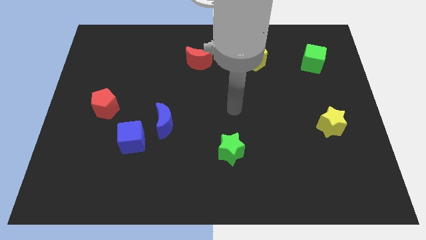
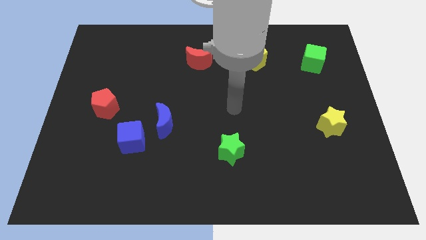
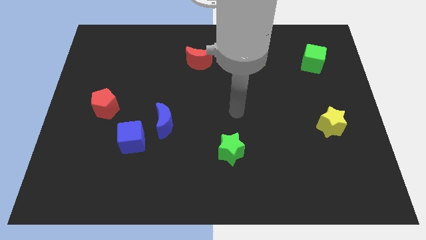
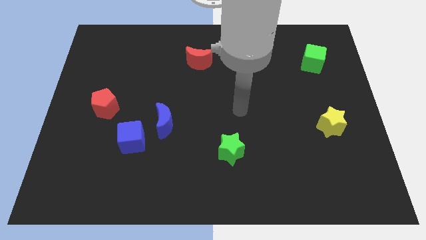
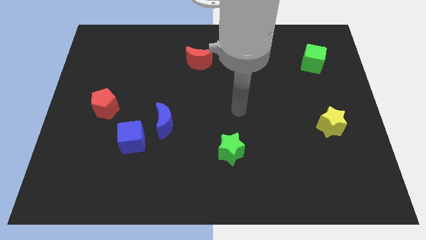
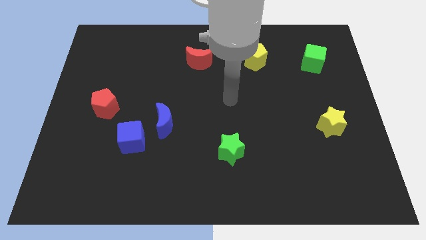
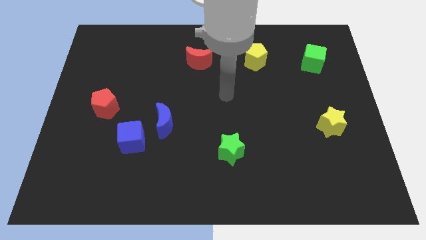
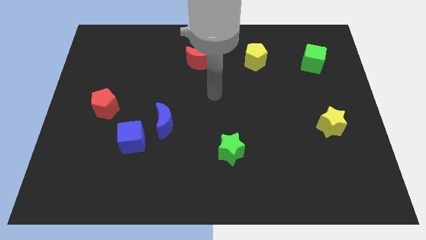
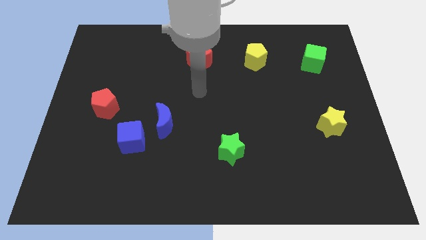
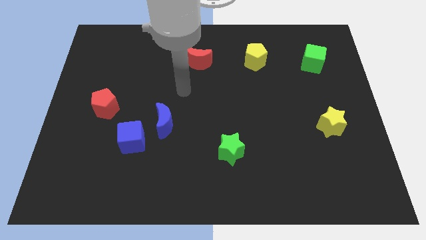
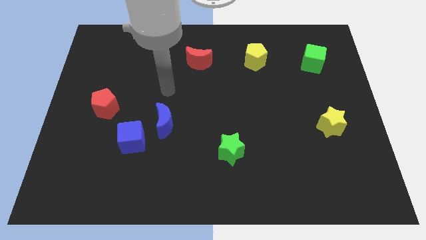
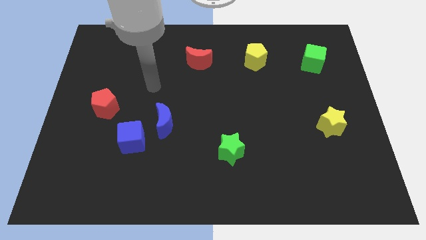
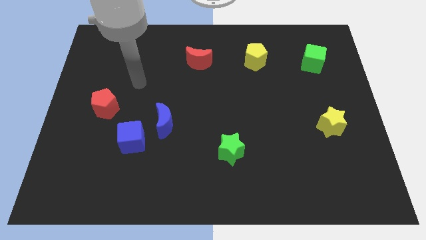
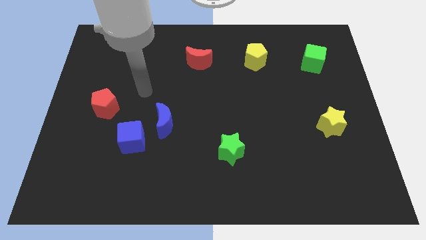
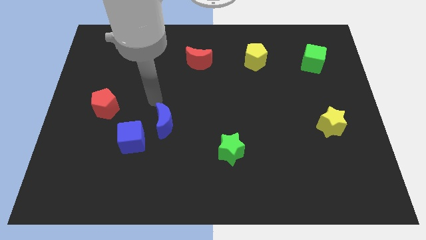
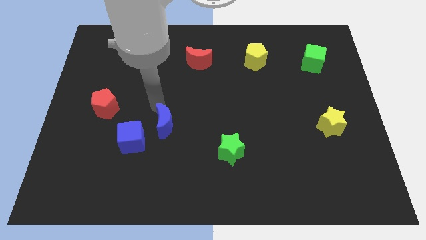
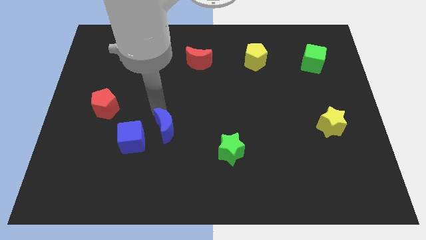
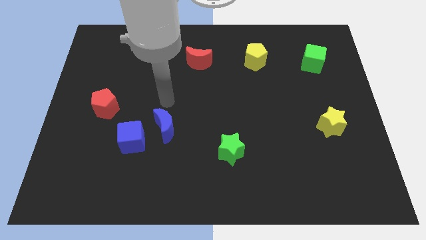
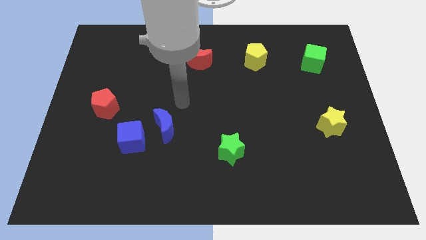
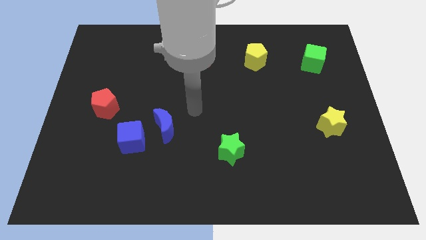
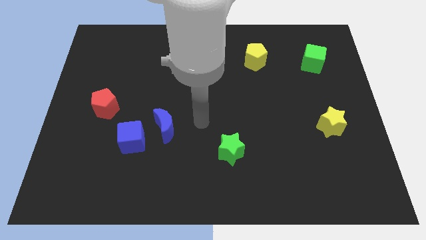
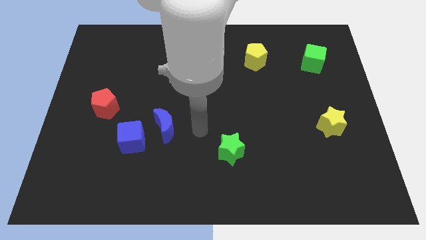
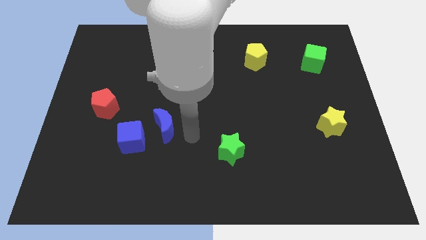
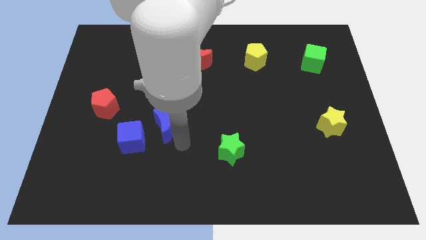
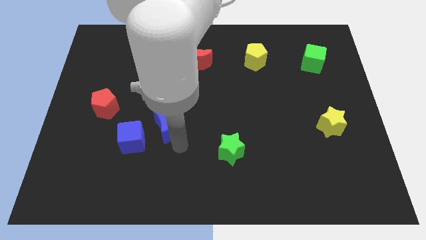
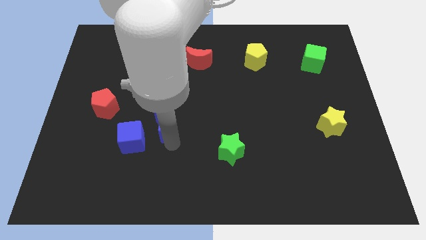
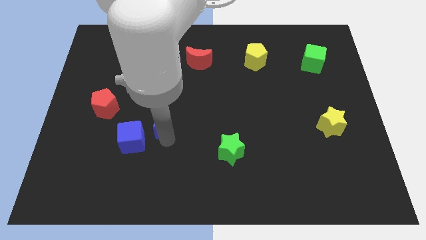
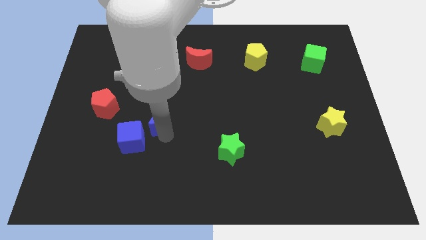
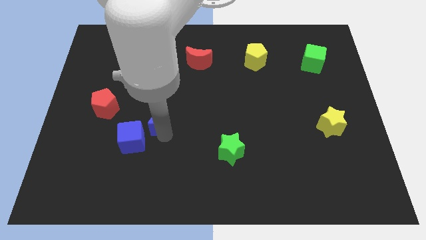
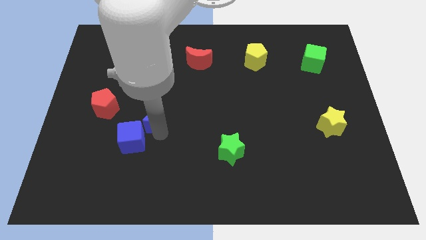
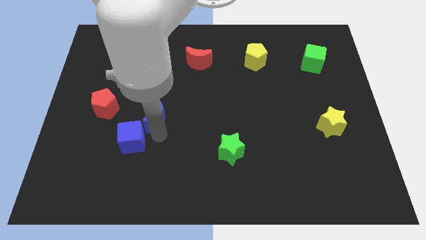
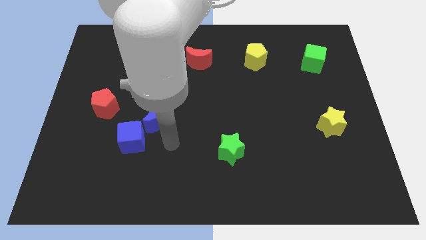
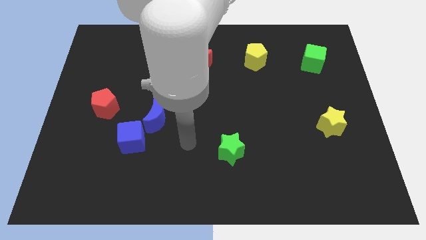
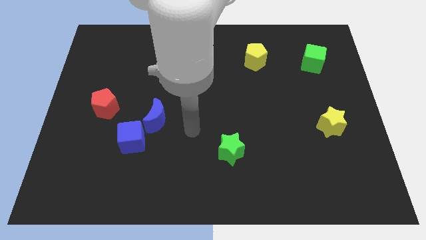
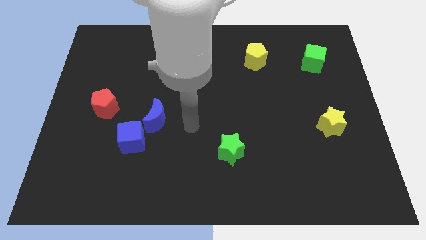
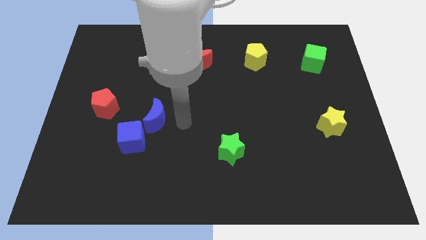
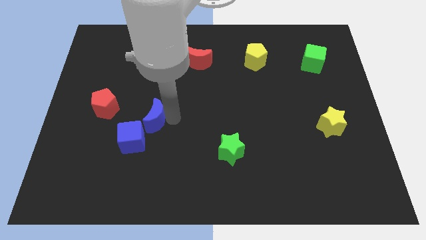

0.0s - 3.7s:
place the blue moon diagonally to the right of the blue cube

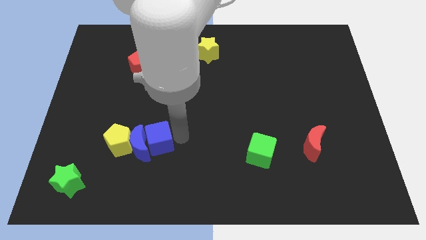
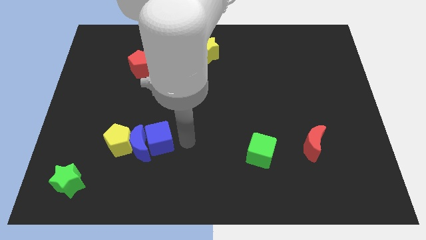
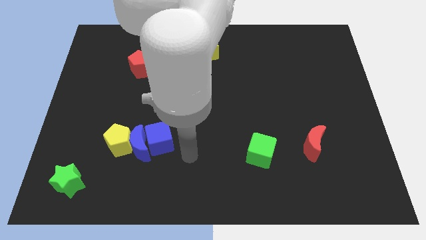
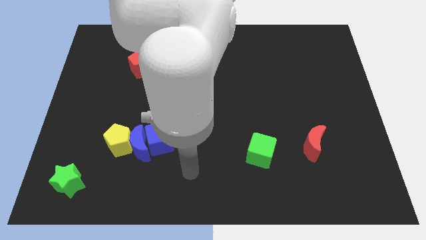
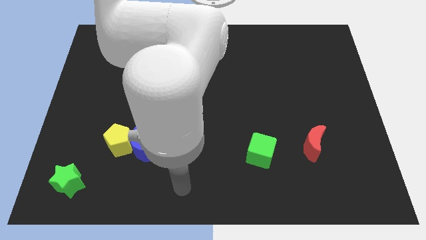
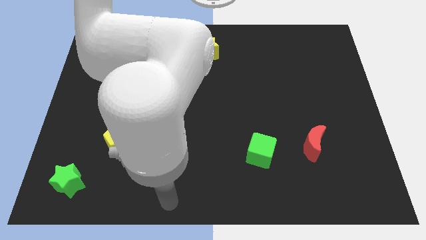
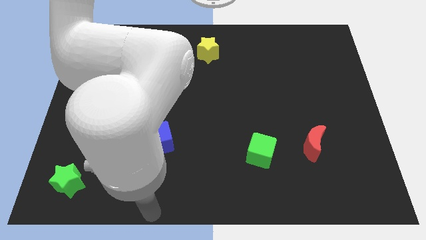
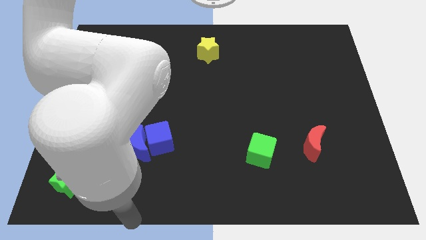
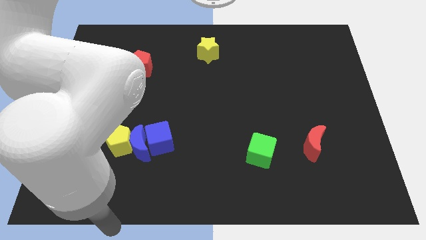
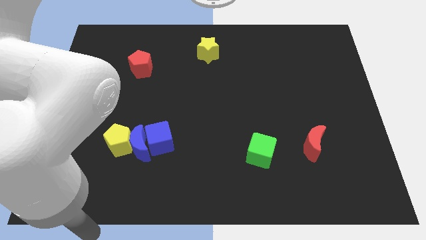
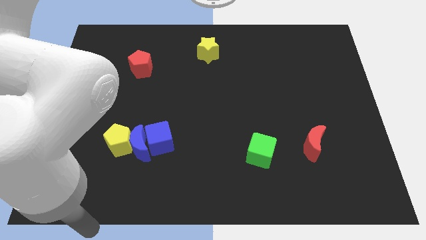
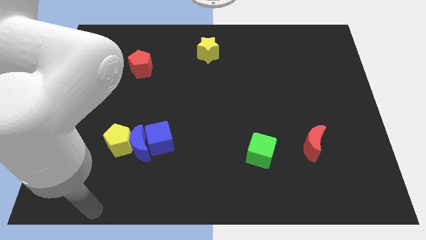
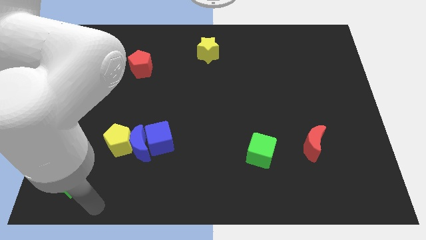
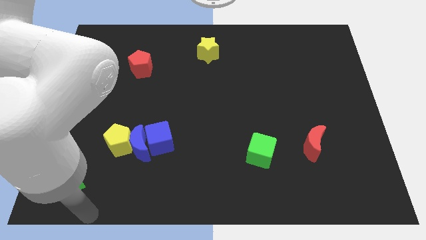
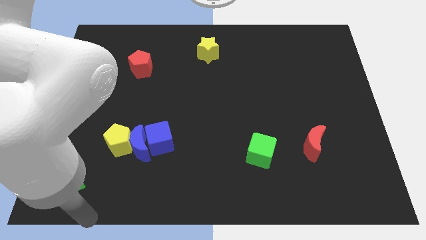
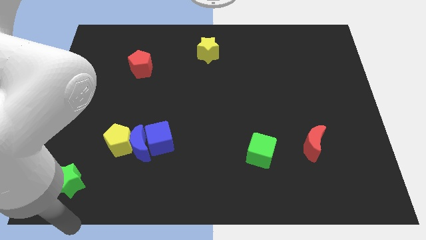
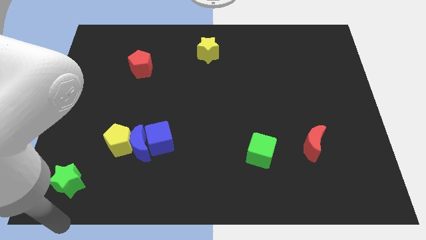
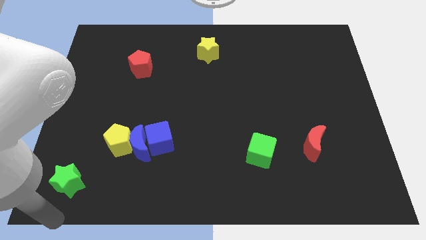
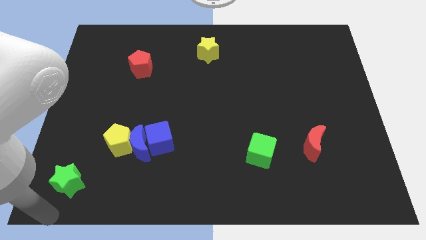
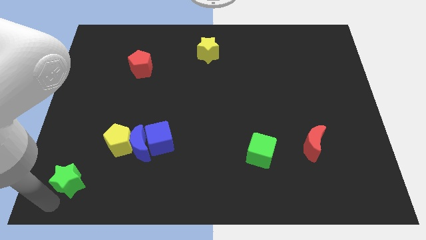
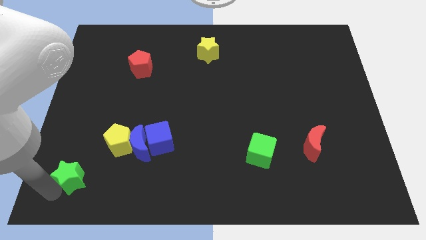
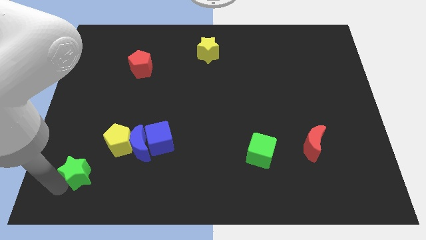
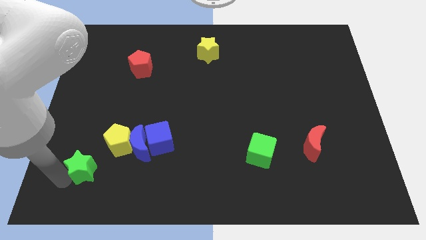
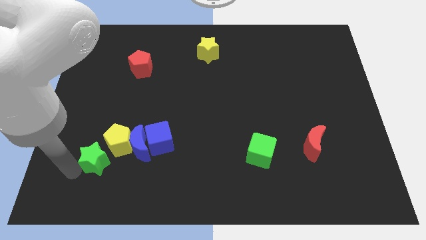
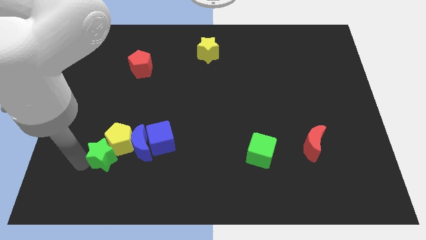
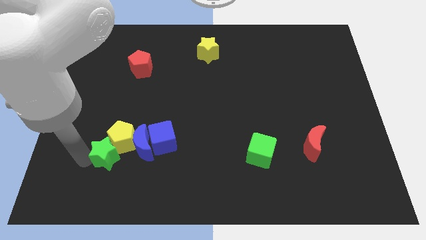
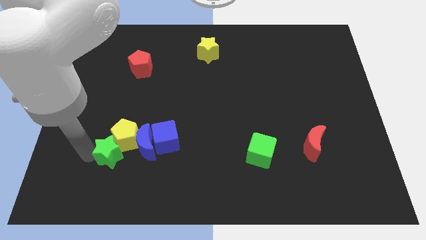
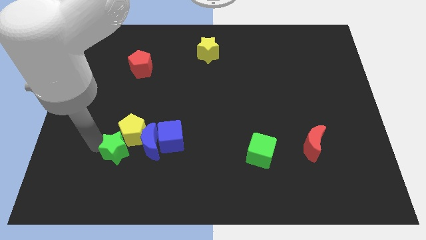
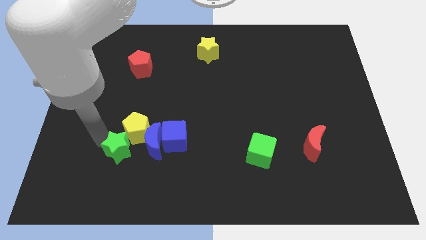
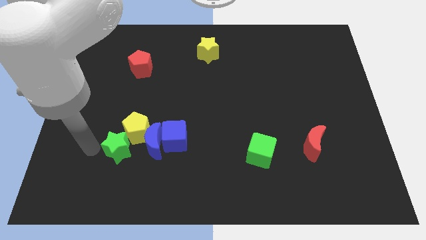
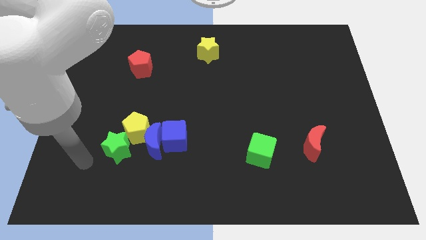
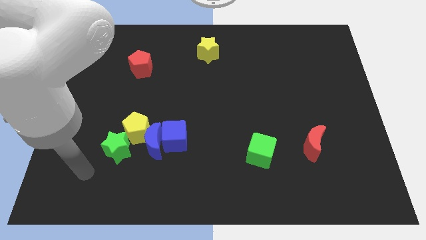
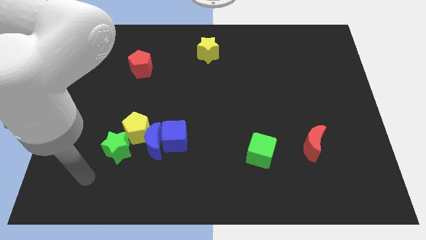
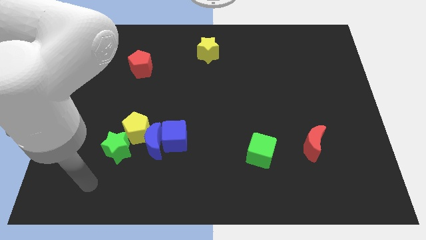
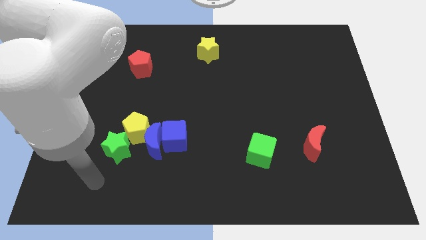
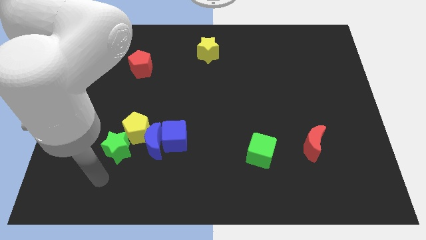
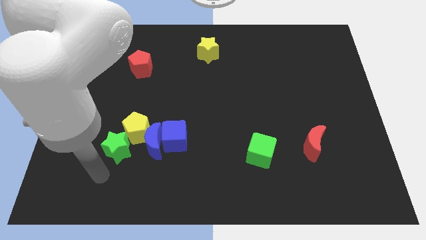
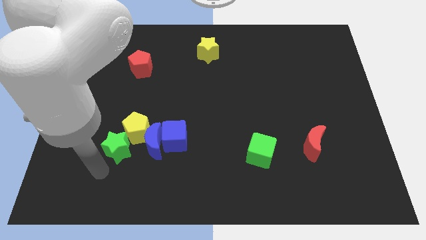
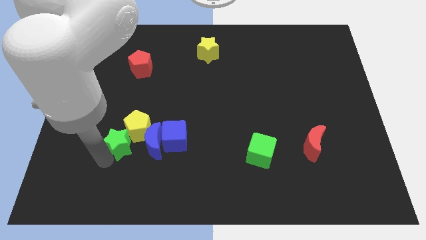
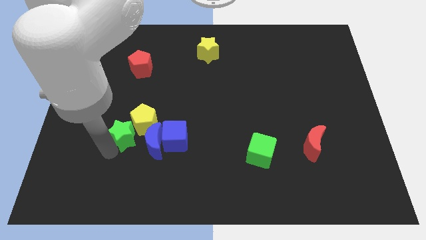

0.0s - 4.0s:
push the green star into the yellow pentagon

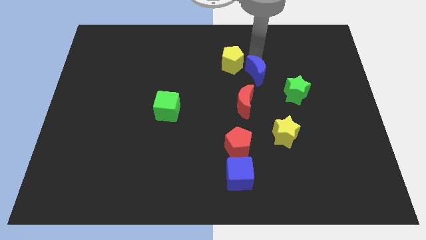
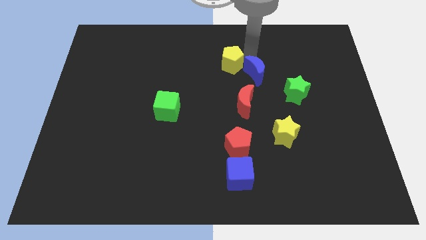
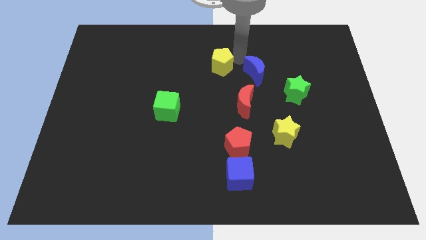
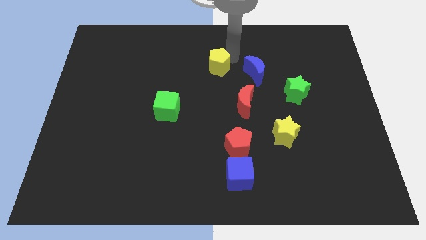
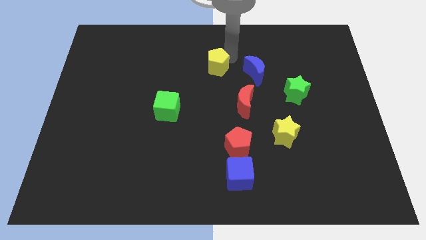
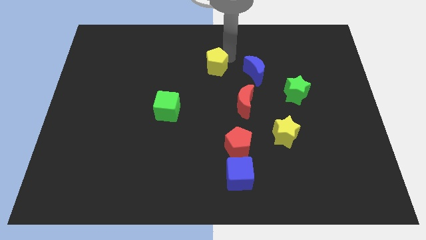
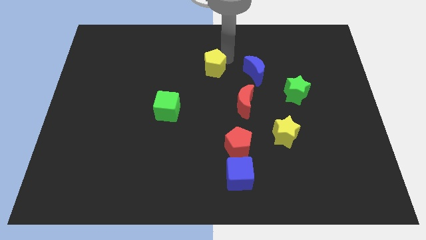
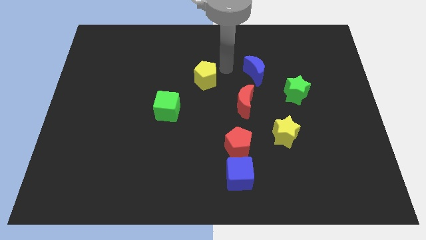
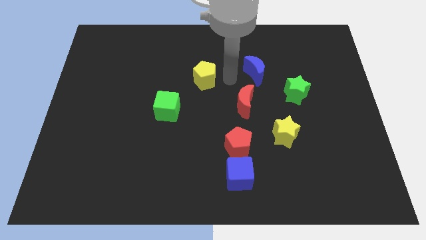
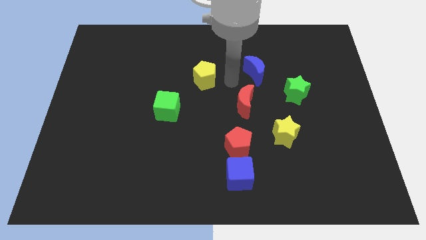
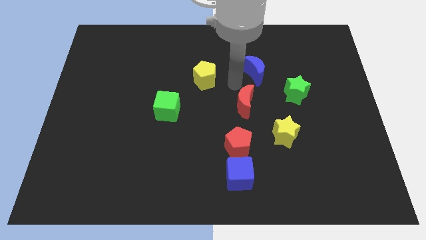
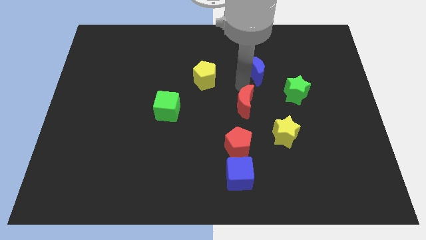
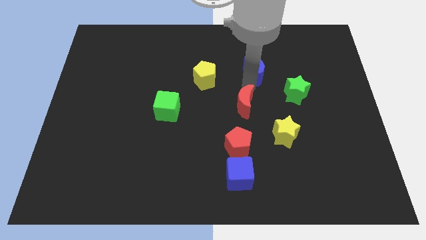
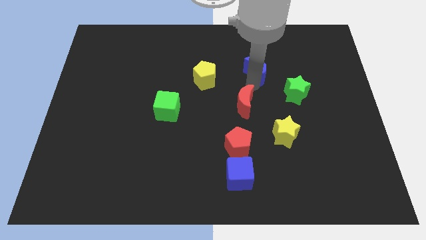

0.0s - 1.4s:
separate the yellow pentagon from the blue moon
